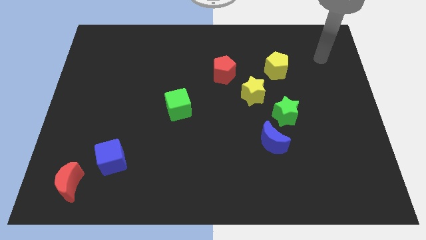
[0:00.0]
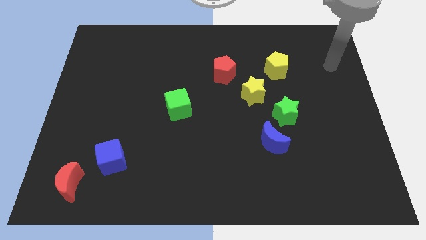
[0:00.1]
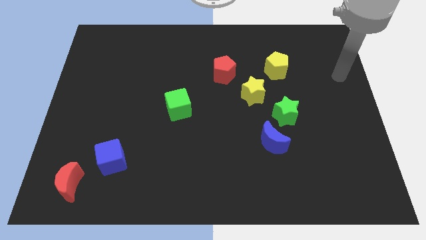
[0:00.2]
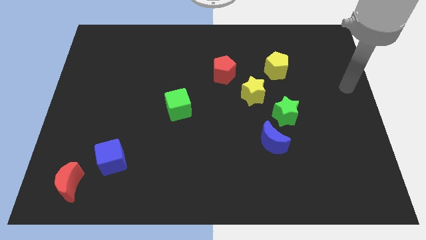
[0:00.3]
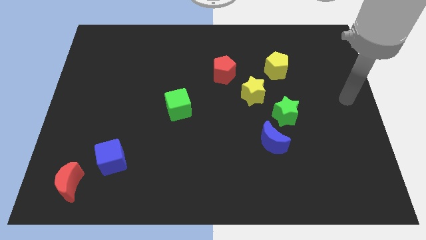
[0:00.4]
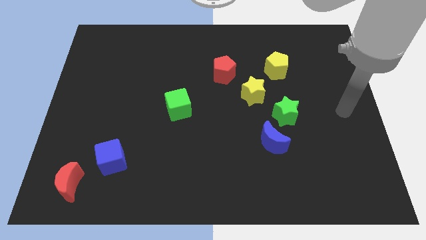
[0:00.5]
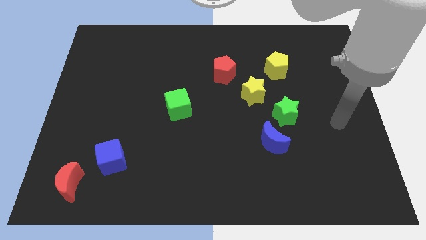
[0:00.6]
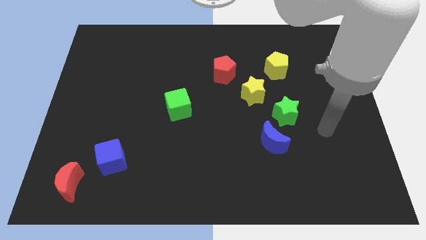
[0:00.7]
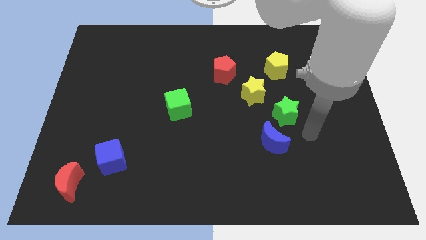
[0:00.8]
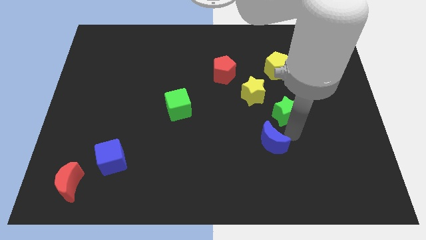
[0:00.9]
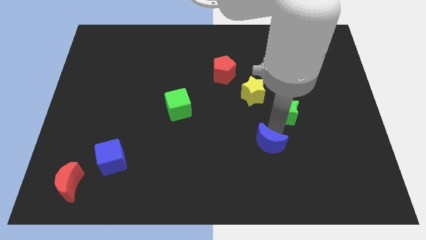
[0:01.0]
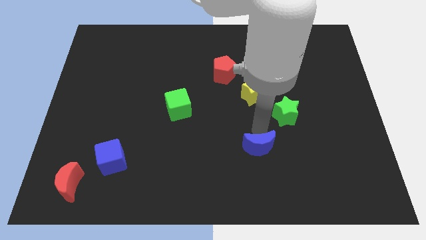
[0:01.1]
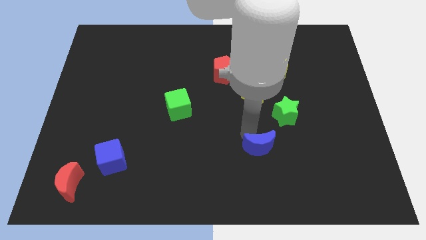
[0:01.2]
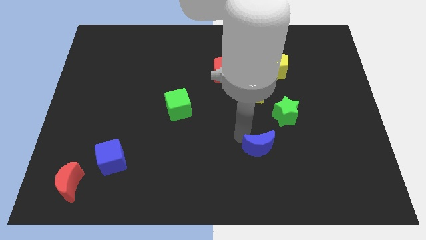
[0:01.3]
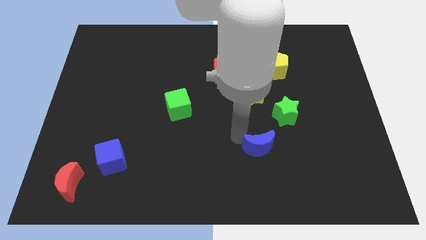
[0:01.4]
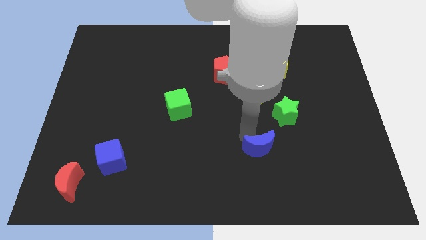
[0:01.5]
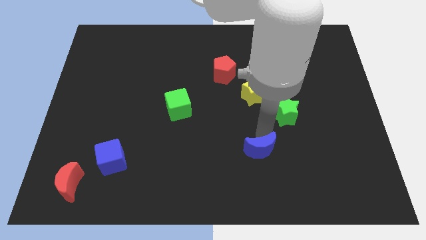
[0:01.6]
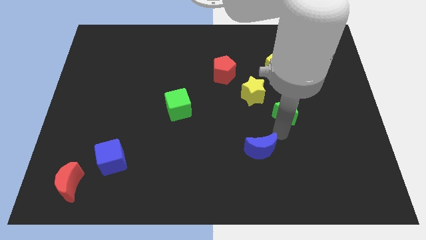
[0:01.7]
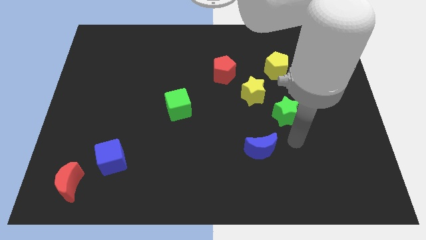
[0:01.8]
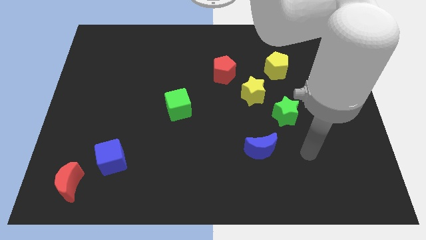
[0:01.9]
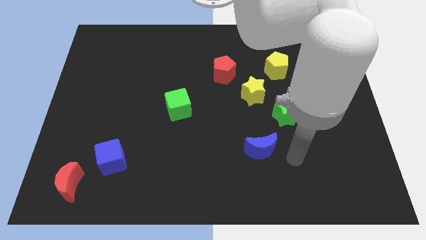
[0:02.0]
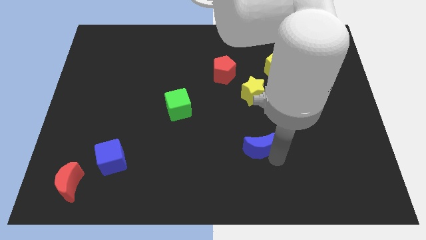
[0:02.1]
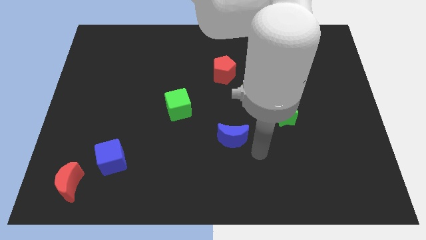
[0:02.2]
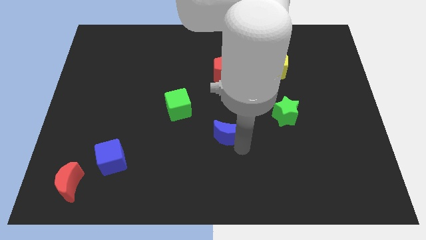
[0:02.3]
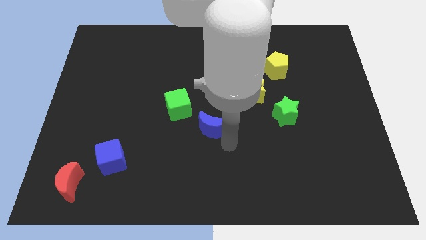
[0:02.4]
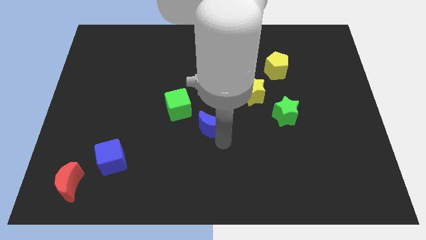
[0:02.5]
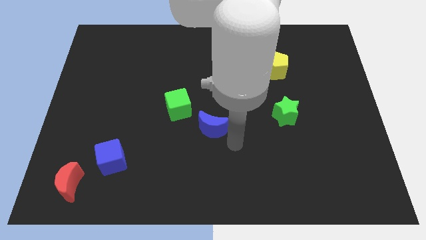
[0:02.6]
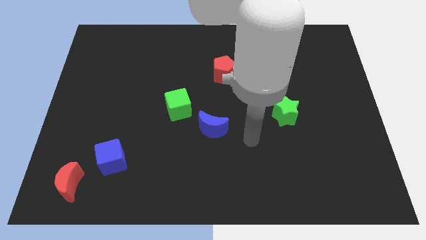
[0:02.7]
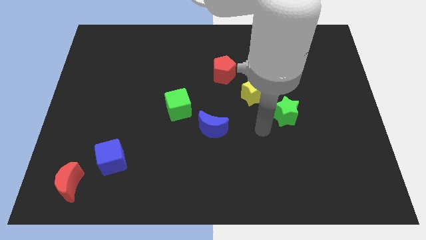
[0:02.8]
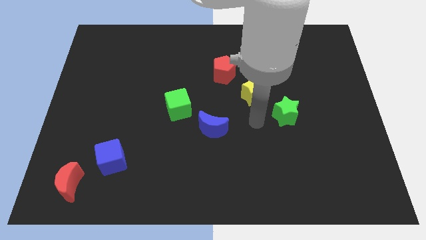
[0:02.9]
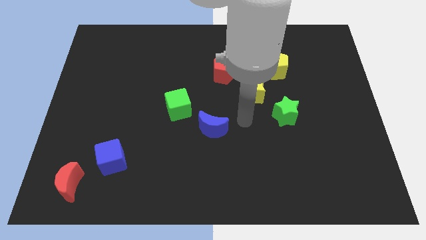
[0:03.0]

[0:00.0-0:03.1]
move the blue crescent towards green cube

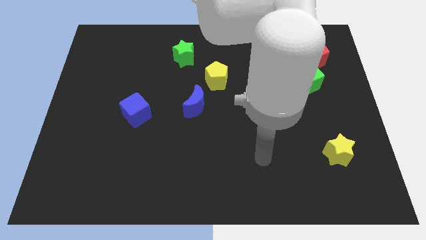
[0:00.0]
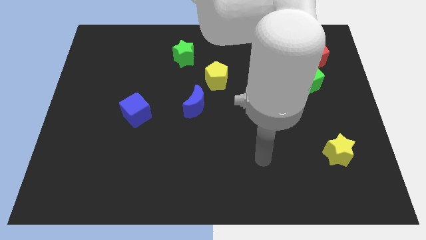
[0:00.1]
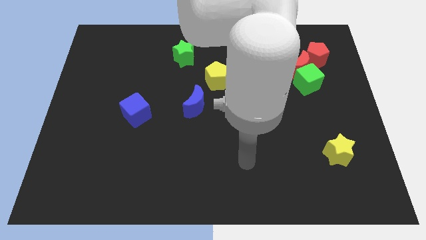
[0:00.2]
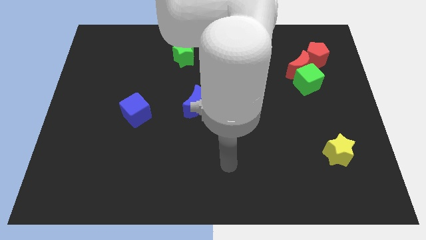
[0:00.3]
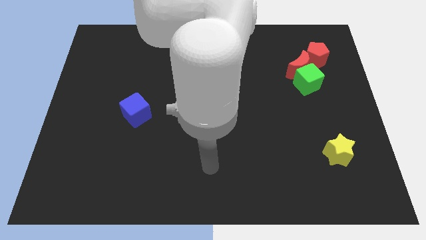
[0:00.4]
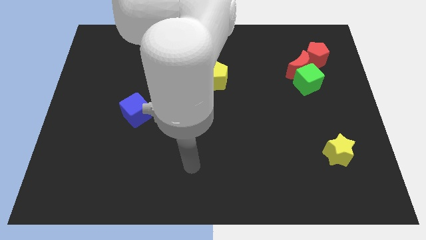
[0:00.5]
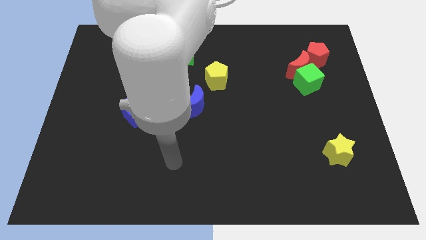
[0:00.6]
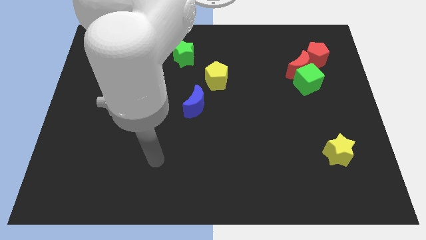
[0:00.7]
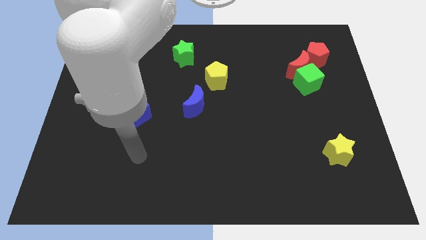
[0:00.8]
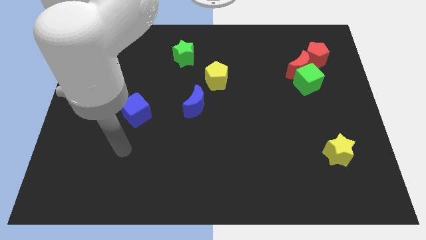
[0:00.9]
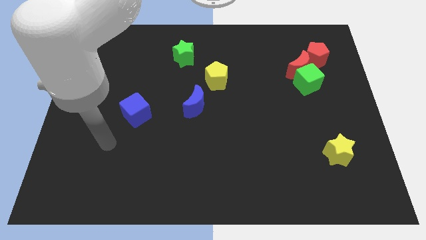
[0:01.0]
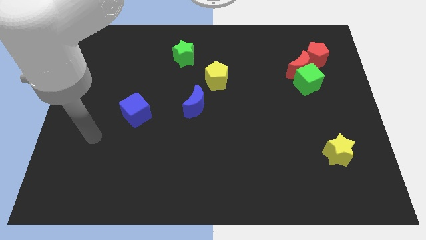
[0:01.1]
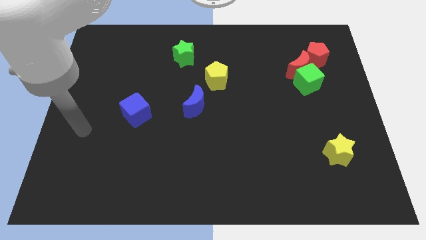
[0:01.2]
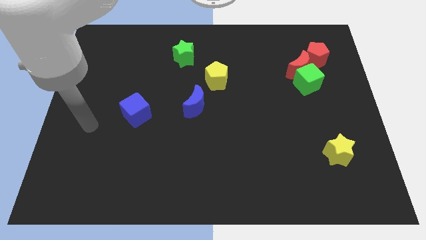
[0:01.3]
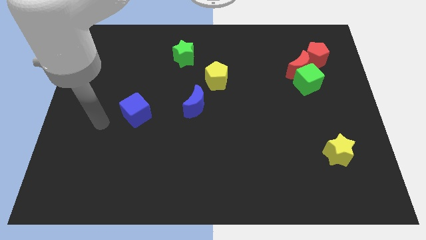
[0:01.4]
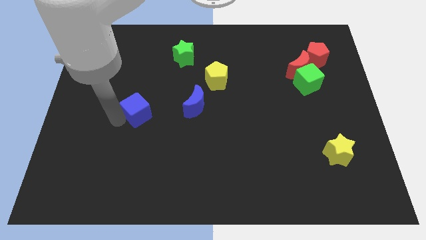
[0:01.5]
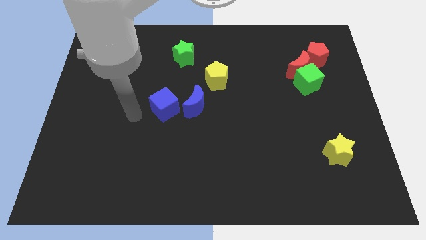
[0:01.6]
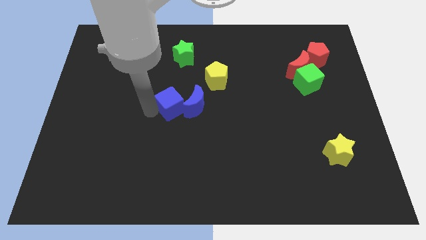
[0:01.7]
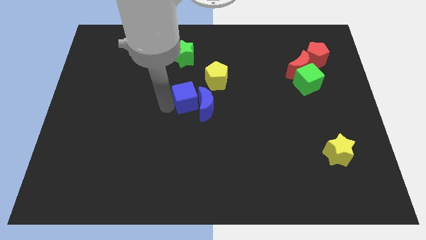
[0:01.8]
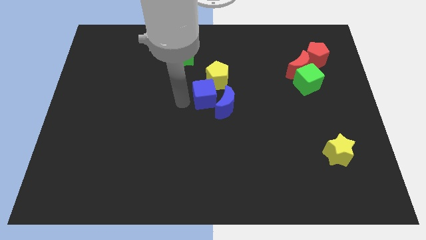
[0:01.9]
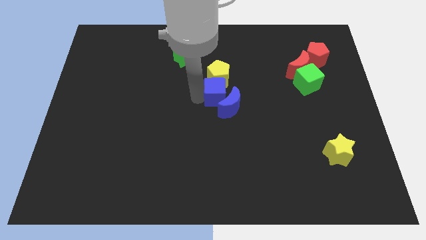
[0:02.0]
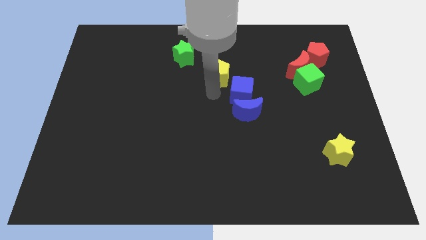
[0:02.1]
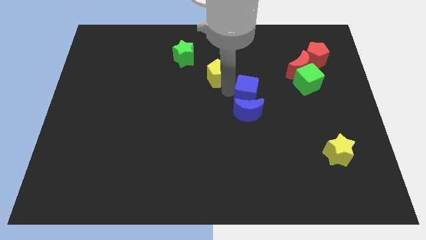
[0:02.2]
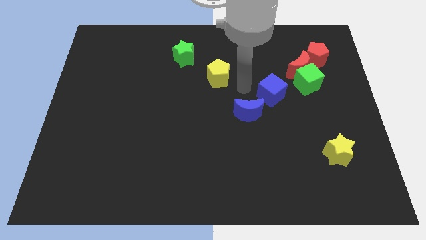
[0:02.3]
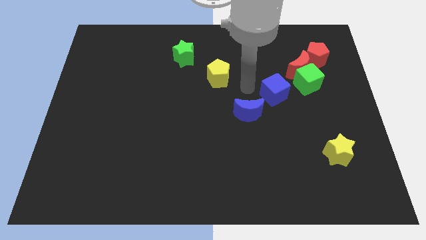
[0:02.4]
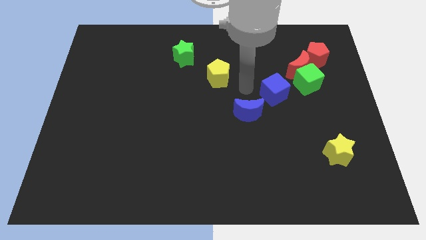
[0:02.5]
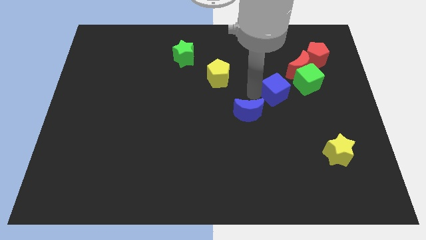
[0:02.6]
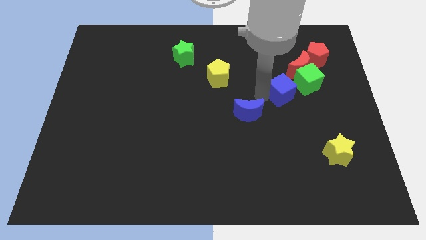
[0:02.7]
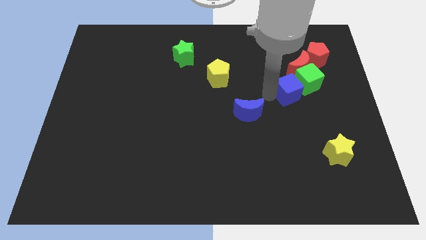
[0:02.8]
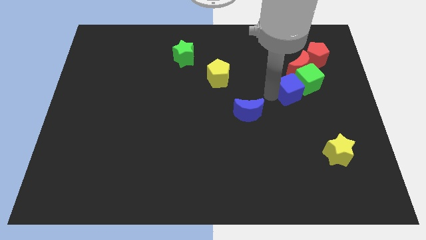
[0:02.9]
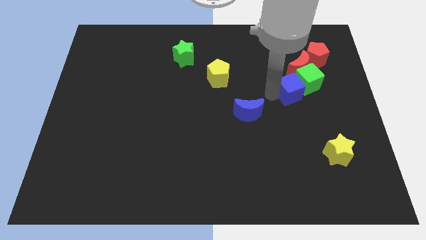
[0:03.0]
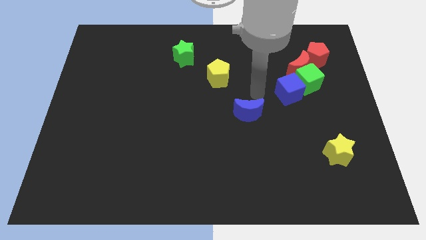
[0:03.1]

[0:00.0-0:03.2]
move the blue cub to the left of the green cube

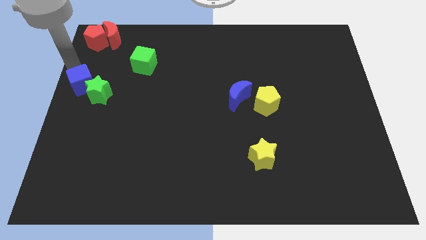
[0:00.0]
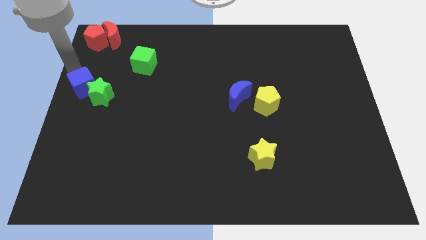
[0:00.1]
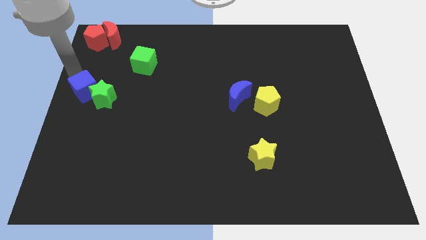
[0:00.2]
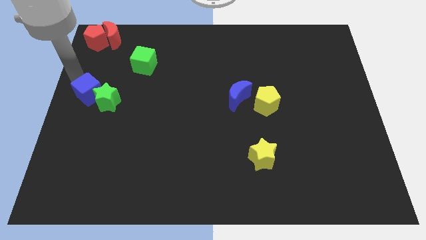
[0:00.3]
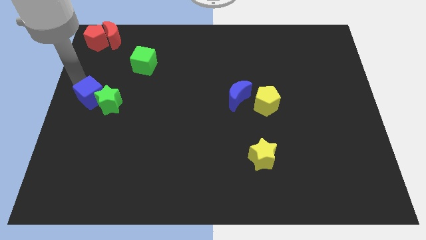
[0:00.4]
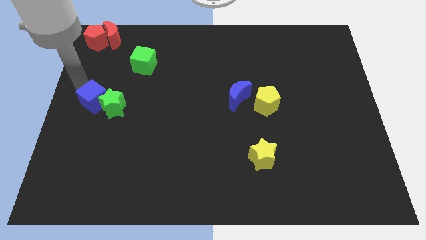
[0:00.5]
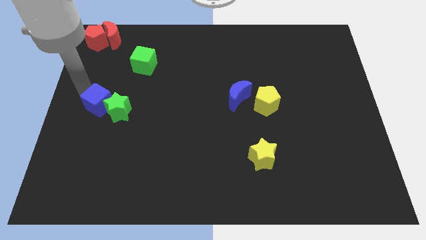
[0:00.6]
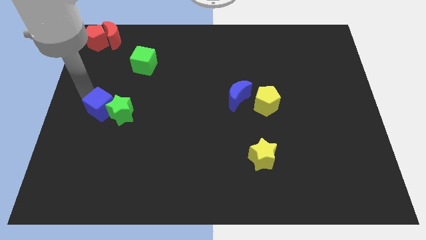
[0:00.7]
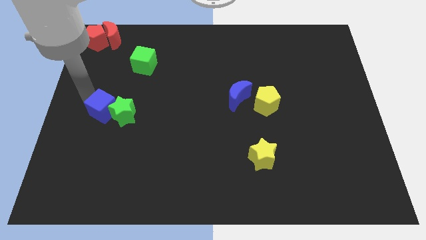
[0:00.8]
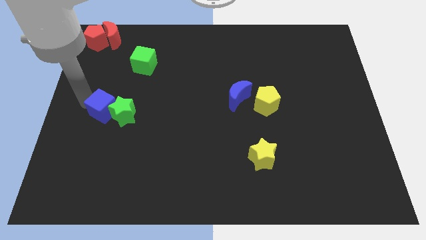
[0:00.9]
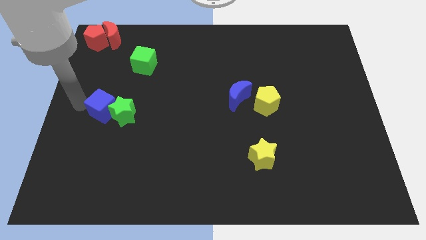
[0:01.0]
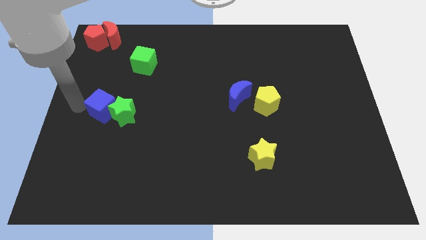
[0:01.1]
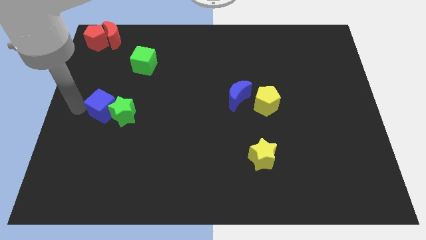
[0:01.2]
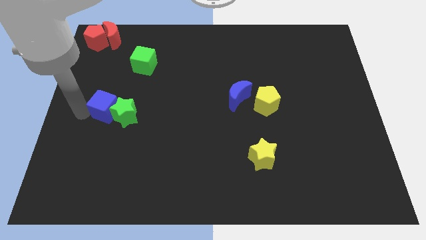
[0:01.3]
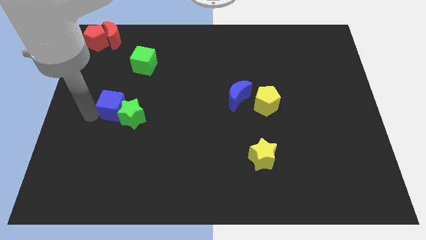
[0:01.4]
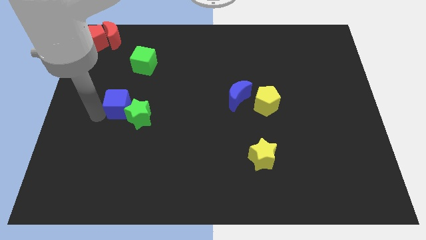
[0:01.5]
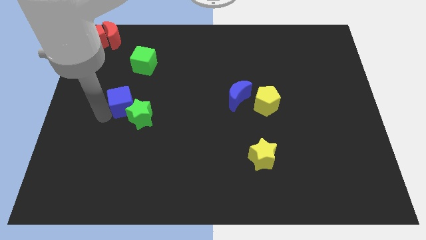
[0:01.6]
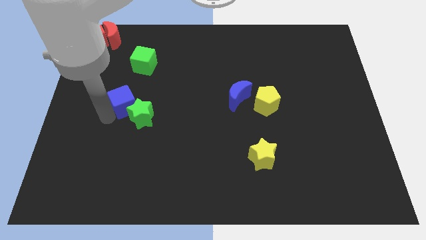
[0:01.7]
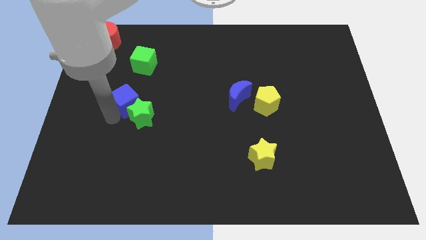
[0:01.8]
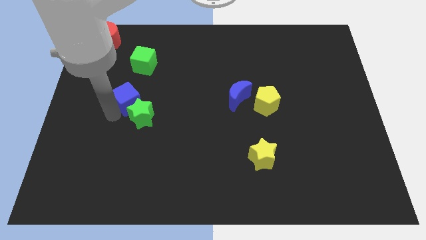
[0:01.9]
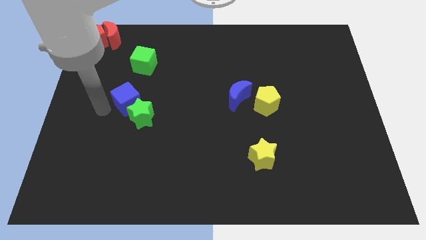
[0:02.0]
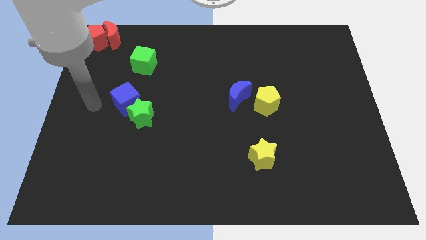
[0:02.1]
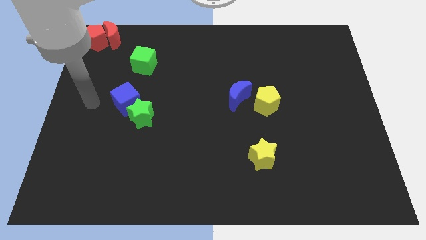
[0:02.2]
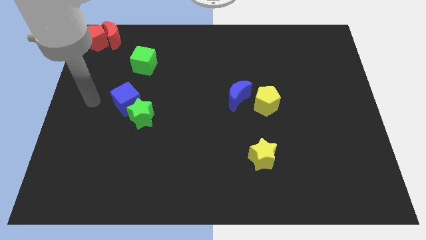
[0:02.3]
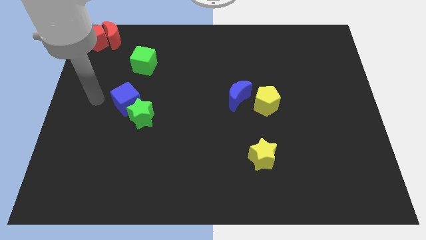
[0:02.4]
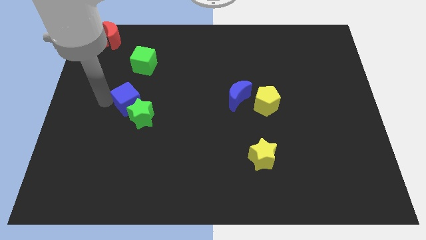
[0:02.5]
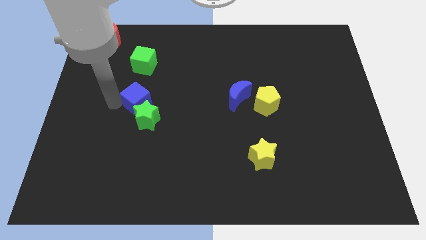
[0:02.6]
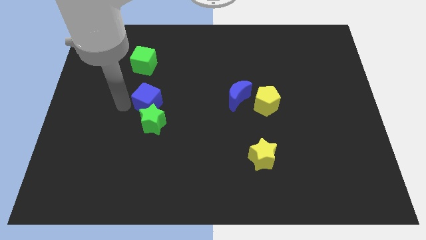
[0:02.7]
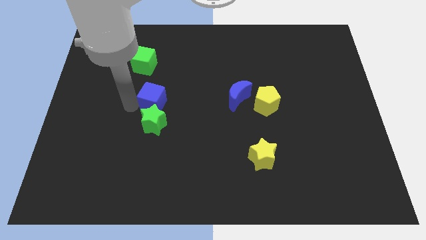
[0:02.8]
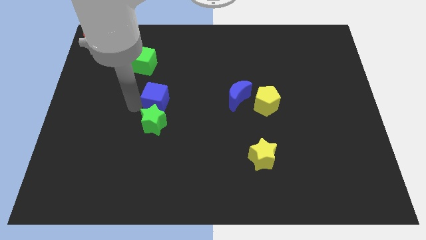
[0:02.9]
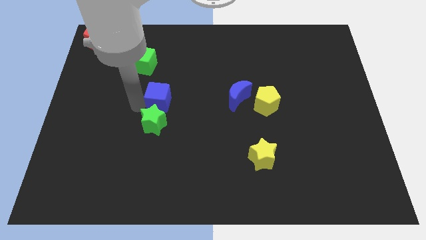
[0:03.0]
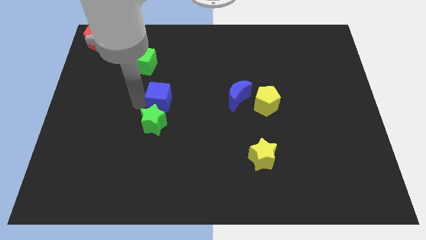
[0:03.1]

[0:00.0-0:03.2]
move the blue cube on the top of the green star
